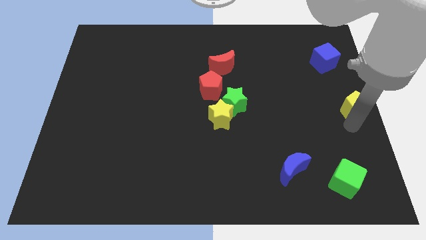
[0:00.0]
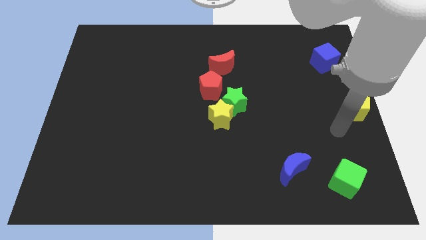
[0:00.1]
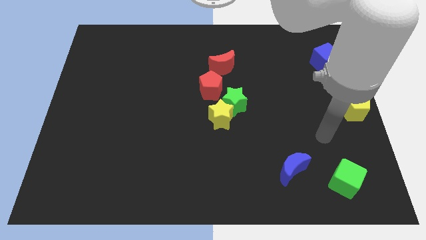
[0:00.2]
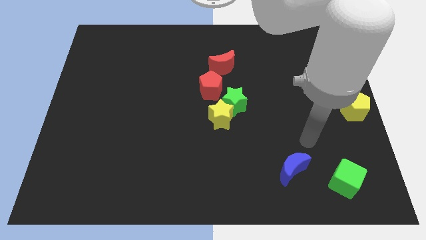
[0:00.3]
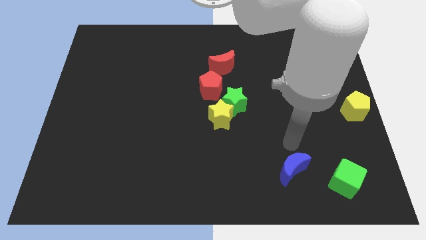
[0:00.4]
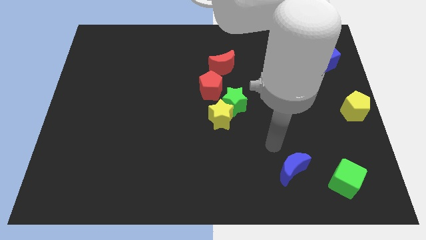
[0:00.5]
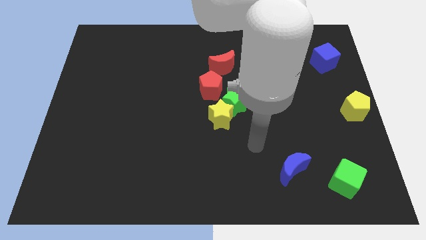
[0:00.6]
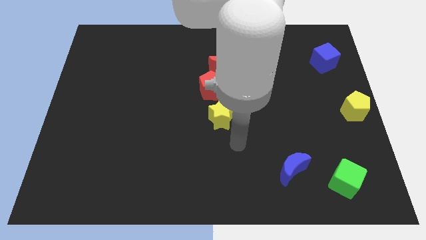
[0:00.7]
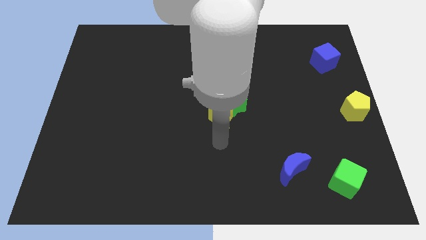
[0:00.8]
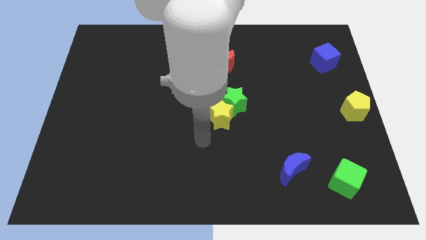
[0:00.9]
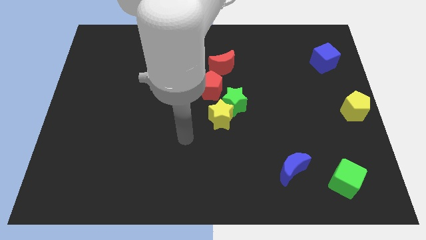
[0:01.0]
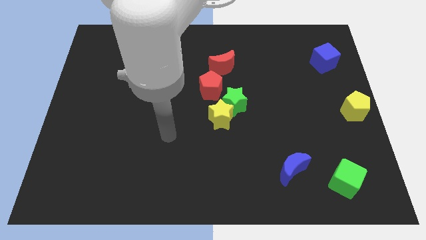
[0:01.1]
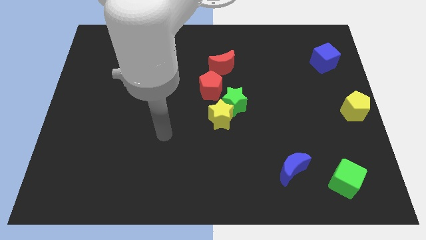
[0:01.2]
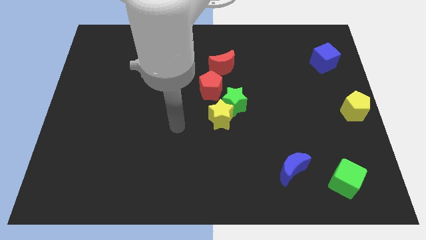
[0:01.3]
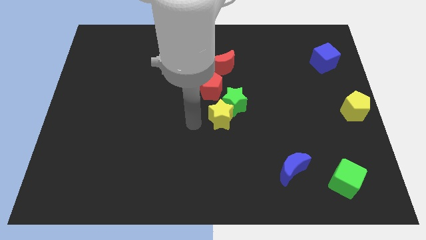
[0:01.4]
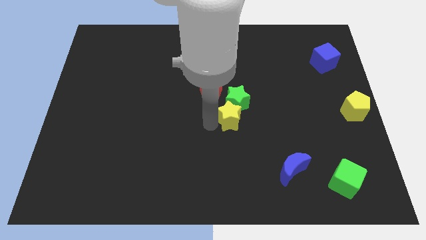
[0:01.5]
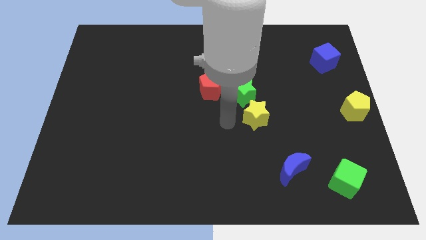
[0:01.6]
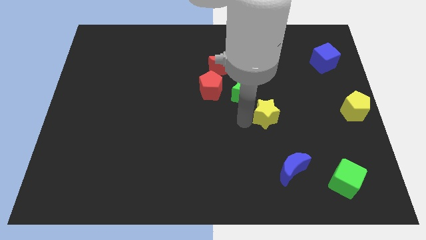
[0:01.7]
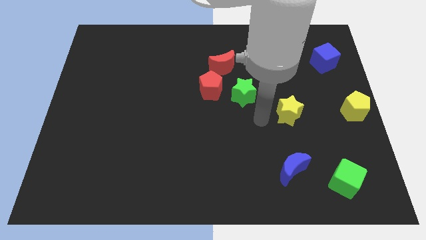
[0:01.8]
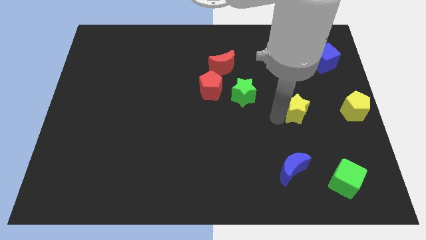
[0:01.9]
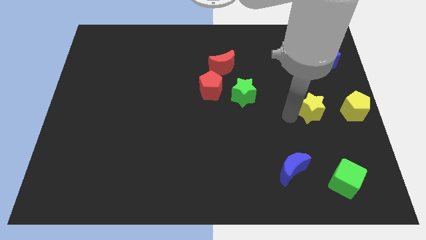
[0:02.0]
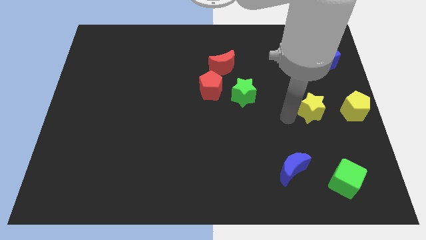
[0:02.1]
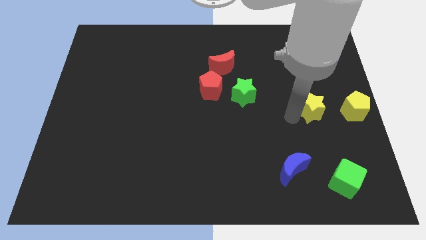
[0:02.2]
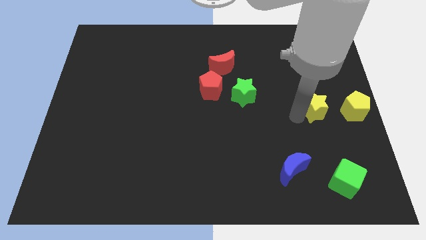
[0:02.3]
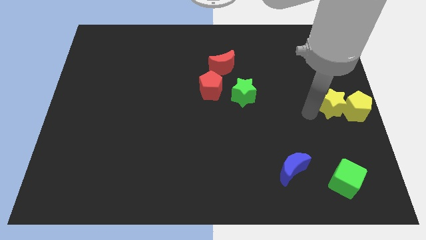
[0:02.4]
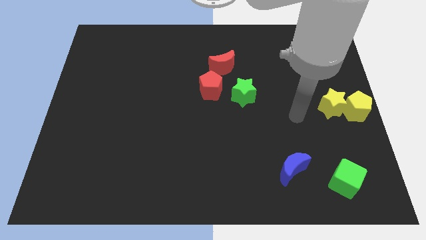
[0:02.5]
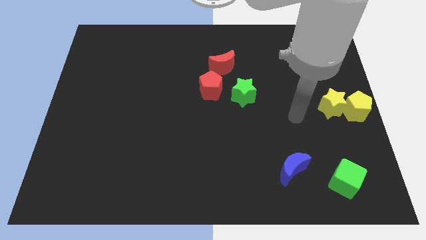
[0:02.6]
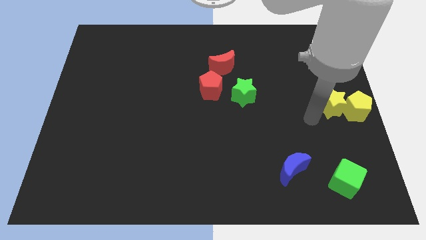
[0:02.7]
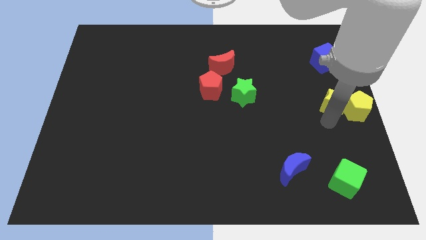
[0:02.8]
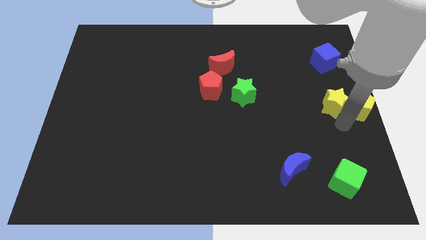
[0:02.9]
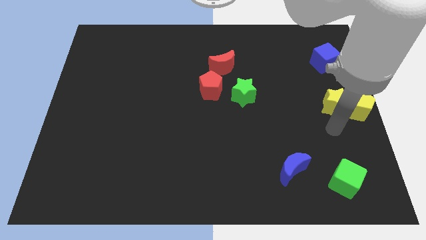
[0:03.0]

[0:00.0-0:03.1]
push the yellow star to the left of the yellow pentagon

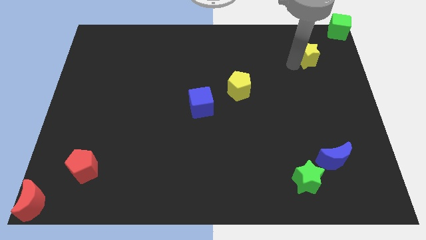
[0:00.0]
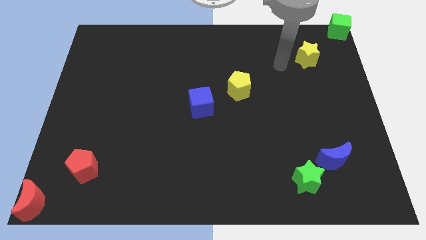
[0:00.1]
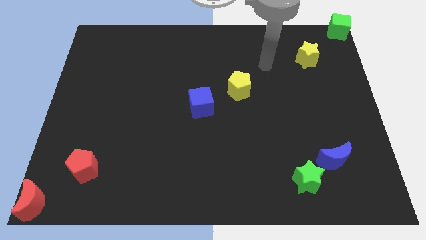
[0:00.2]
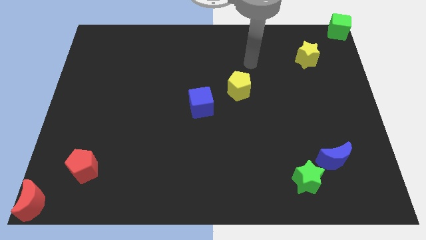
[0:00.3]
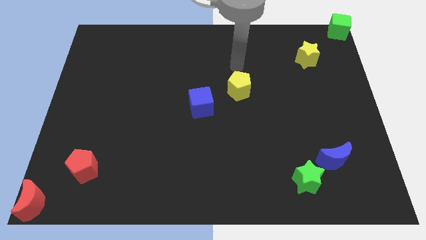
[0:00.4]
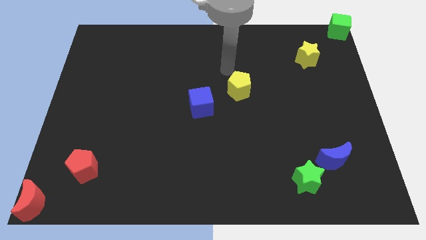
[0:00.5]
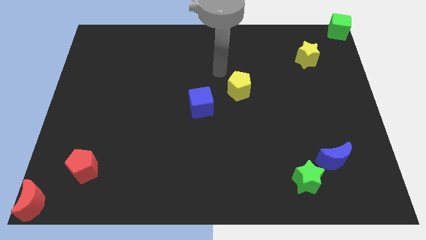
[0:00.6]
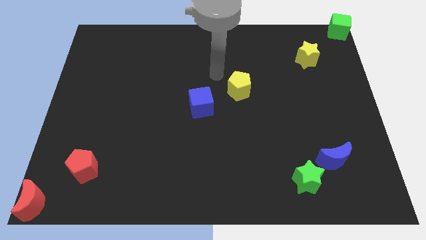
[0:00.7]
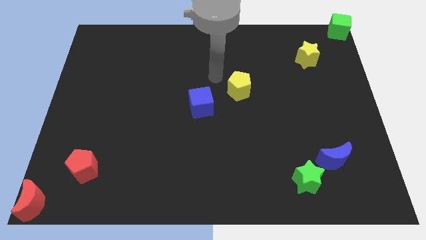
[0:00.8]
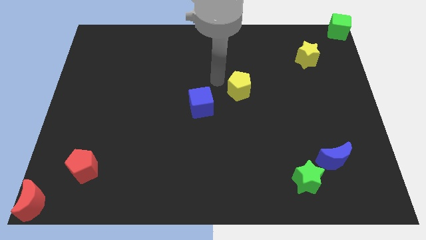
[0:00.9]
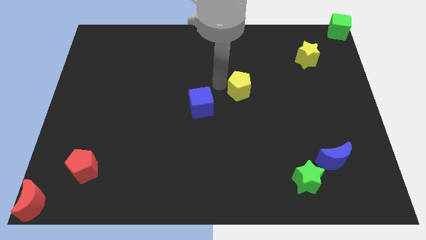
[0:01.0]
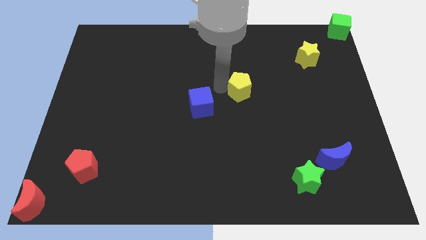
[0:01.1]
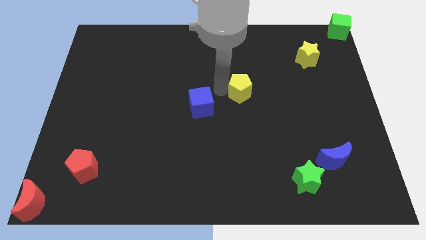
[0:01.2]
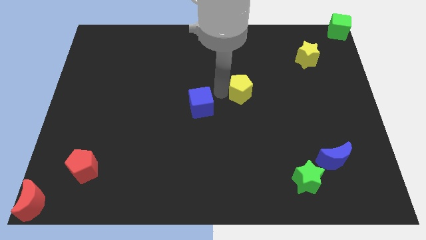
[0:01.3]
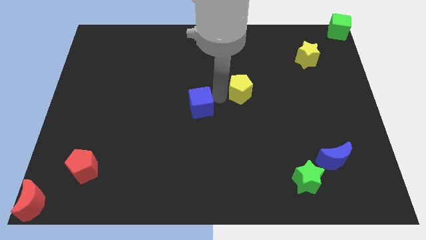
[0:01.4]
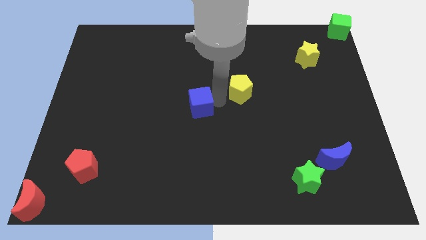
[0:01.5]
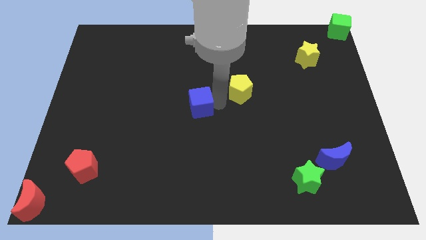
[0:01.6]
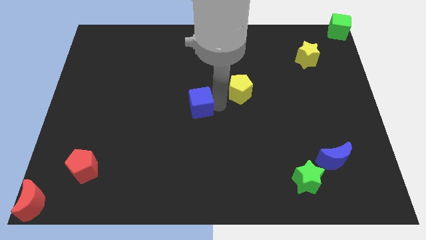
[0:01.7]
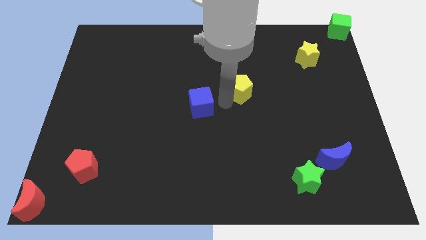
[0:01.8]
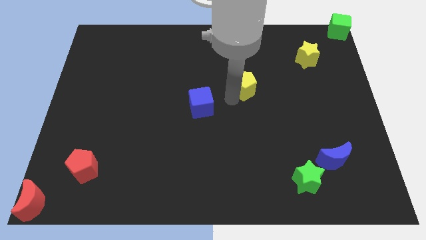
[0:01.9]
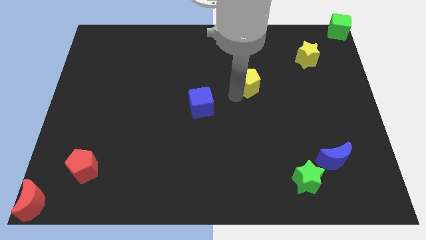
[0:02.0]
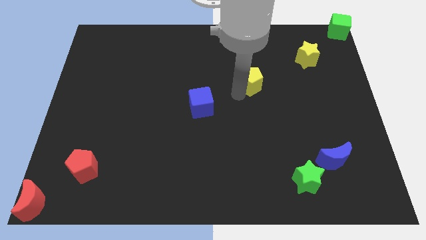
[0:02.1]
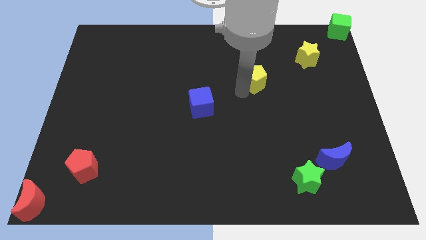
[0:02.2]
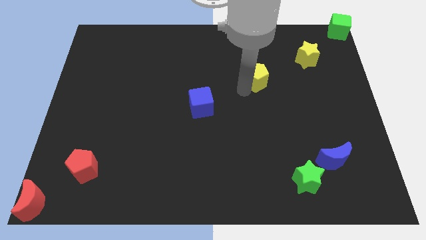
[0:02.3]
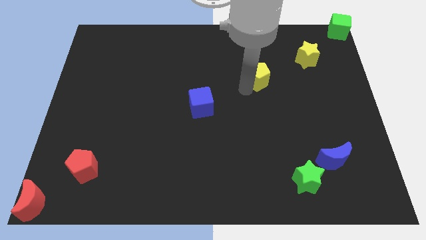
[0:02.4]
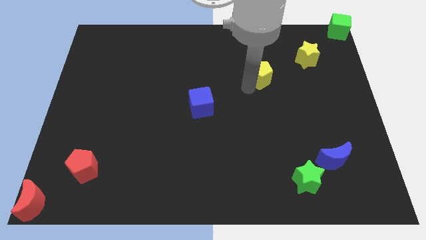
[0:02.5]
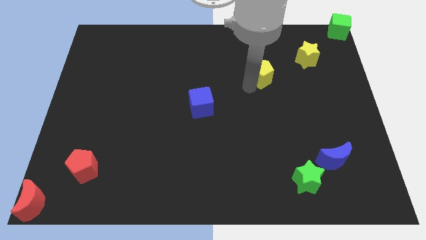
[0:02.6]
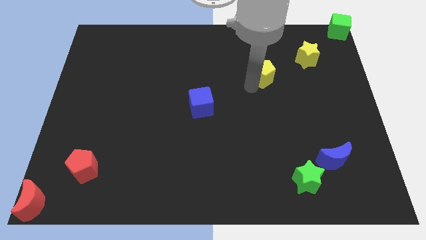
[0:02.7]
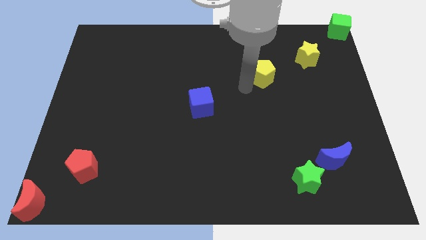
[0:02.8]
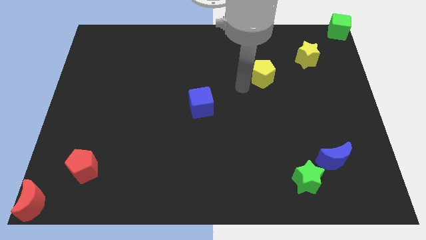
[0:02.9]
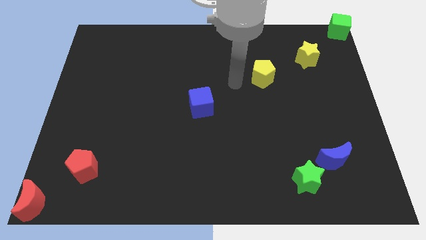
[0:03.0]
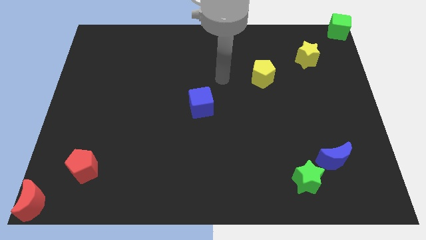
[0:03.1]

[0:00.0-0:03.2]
place the yellow pentagon in between the blue cube and the yellow star

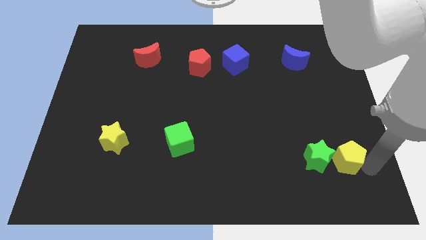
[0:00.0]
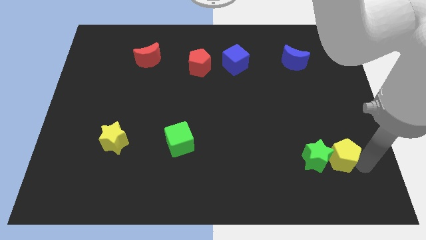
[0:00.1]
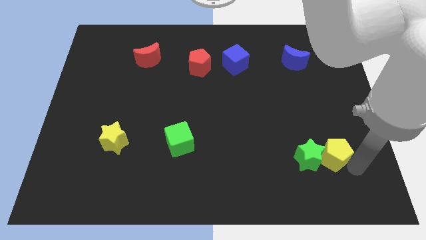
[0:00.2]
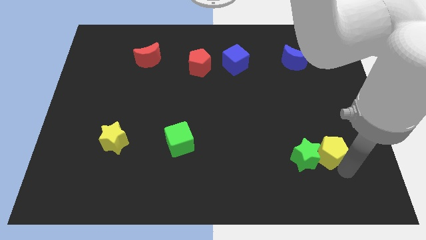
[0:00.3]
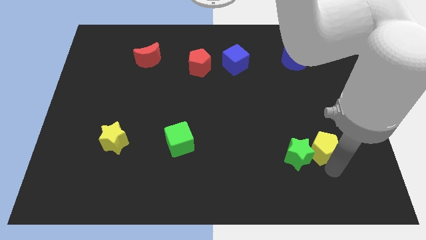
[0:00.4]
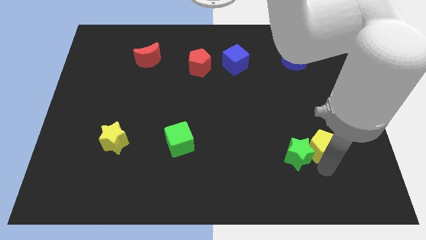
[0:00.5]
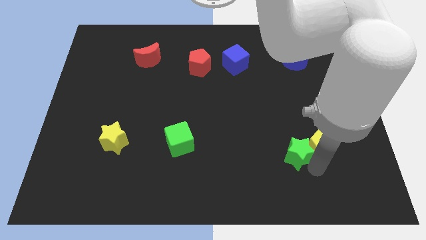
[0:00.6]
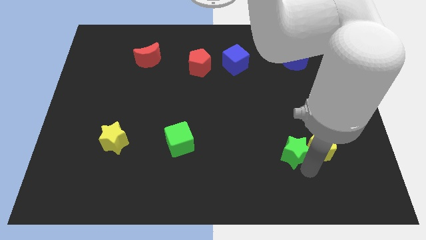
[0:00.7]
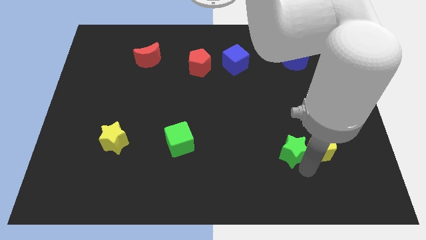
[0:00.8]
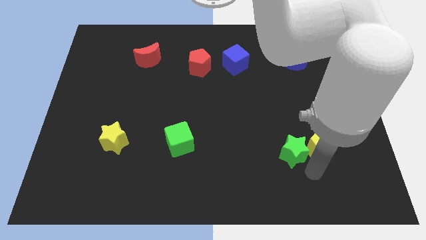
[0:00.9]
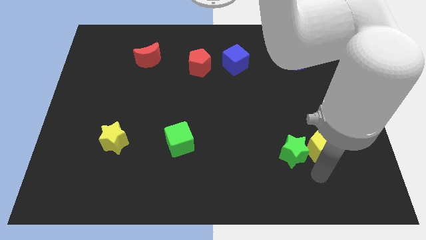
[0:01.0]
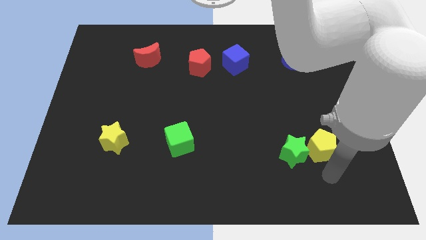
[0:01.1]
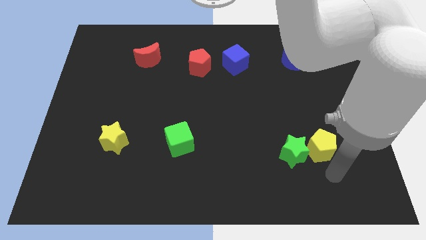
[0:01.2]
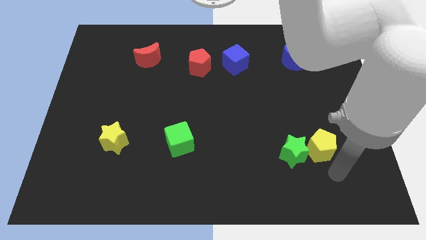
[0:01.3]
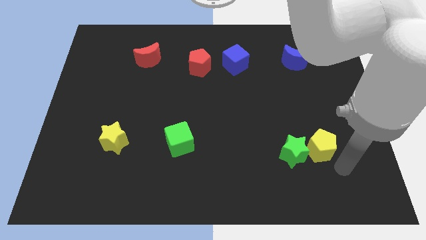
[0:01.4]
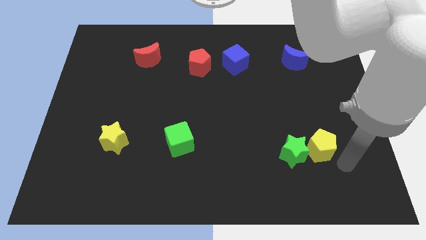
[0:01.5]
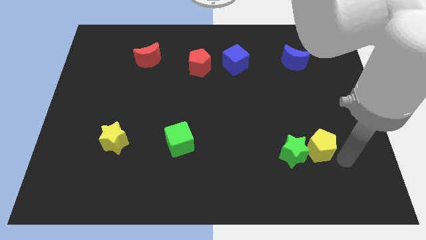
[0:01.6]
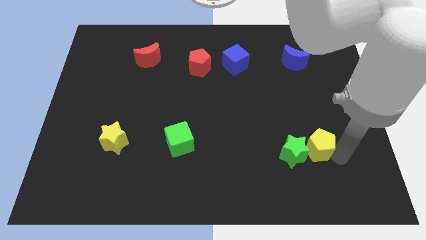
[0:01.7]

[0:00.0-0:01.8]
move yellow pentagon and green star towards left side

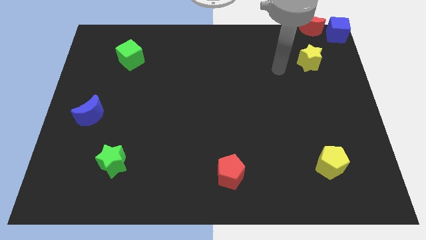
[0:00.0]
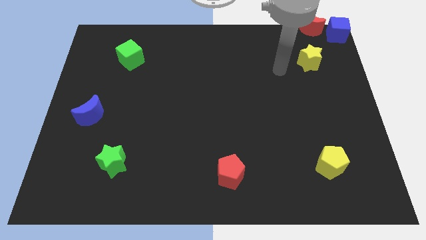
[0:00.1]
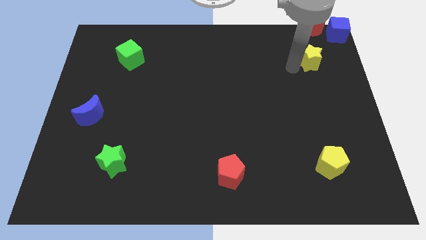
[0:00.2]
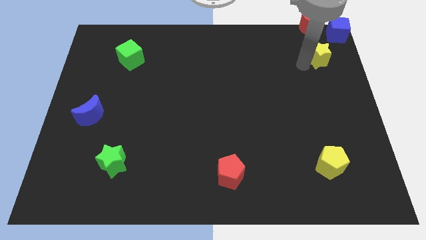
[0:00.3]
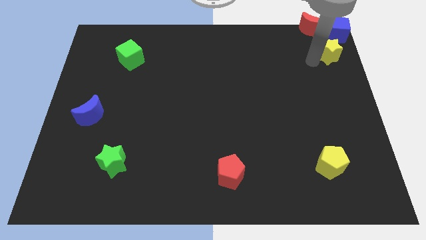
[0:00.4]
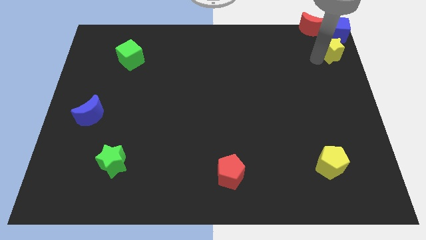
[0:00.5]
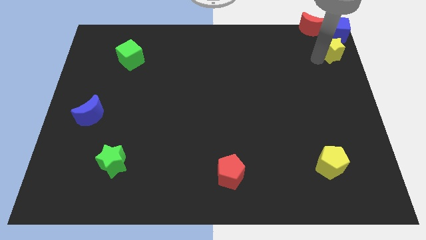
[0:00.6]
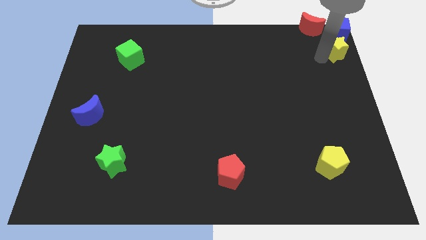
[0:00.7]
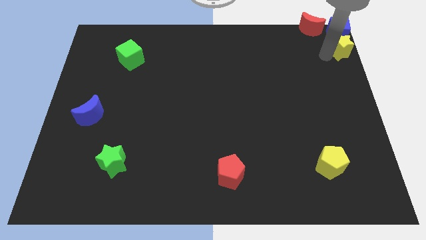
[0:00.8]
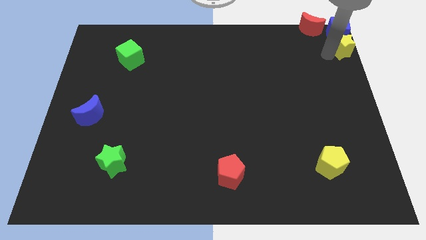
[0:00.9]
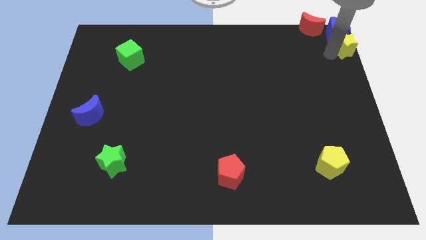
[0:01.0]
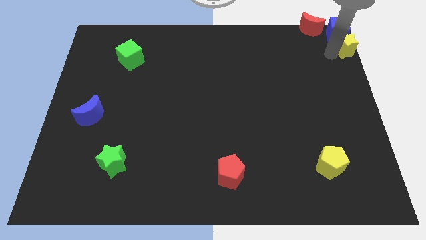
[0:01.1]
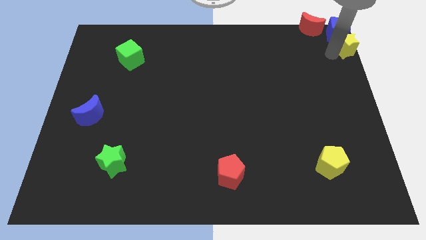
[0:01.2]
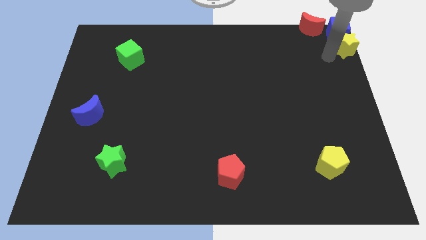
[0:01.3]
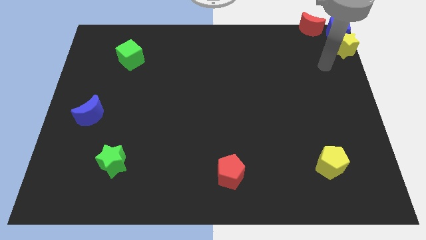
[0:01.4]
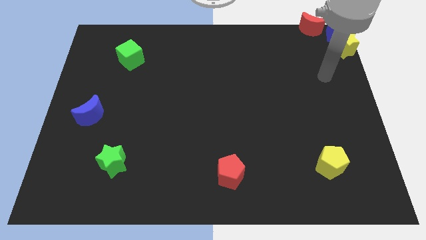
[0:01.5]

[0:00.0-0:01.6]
move the yellow star below the blue cube
